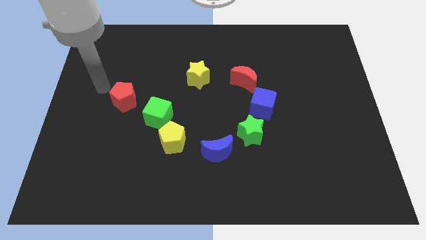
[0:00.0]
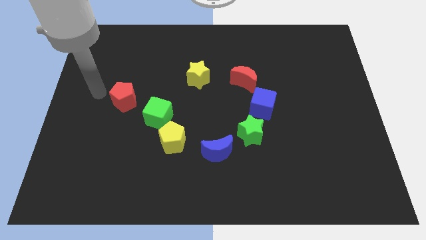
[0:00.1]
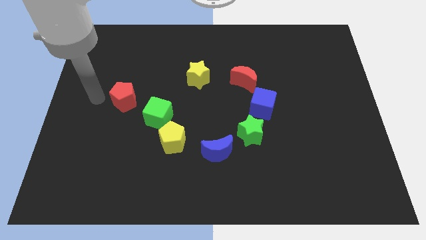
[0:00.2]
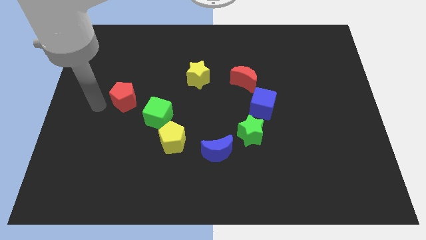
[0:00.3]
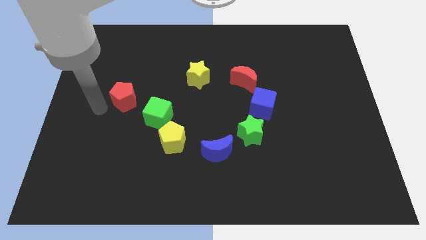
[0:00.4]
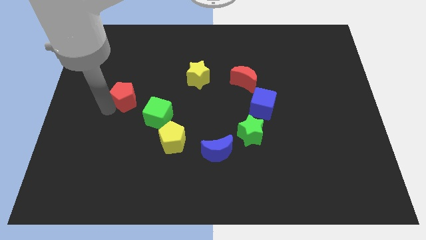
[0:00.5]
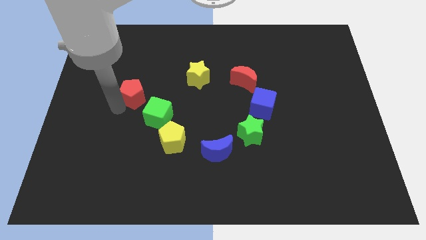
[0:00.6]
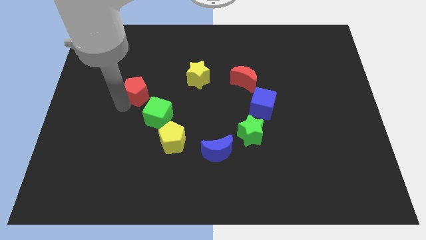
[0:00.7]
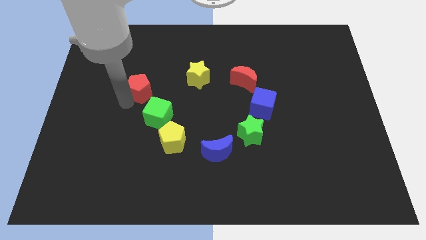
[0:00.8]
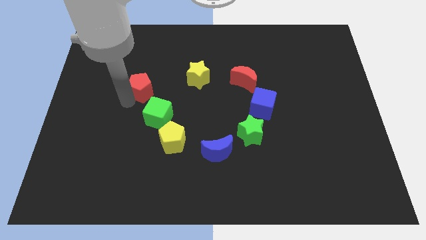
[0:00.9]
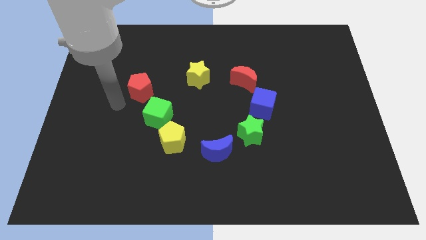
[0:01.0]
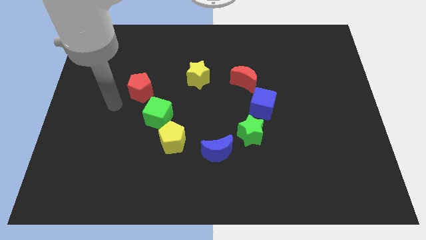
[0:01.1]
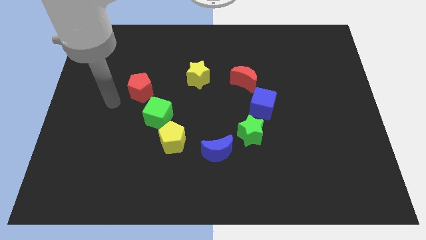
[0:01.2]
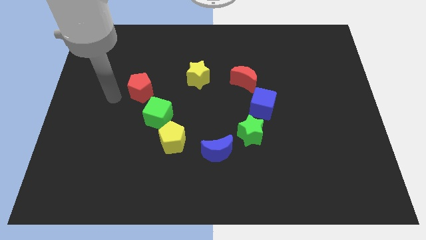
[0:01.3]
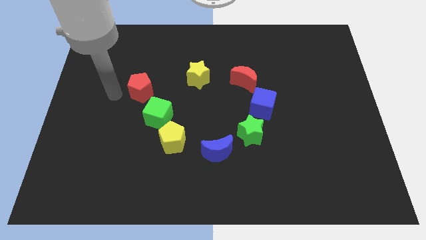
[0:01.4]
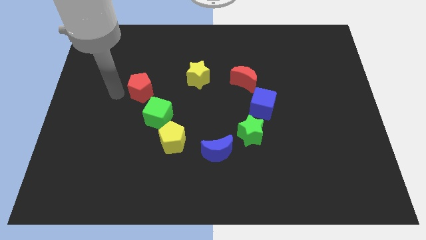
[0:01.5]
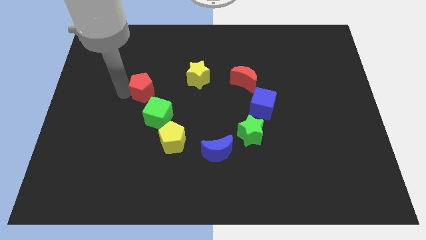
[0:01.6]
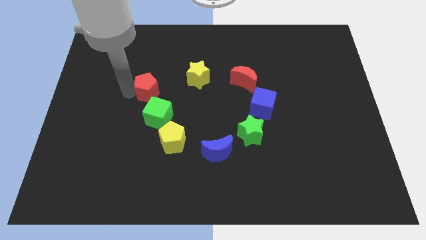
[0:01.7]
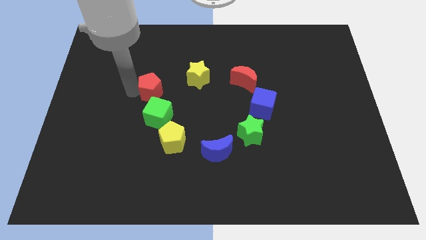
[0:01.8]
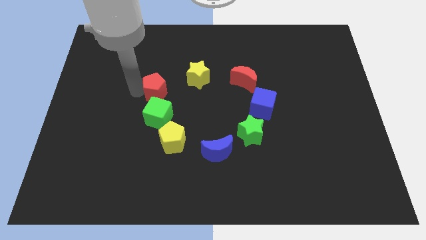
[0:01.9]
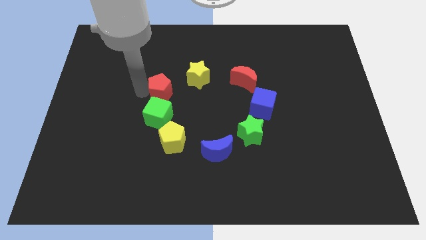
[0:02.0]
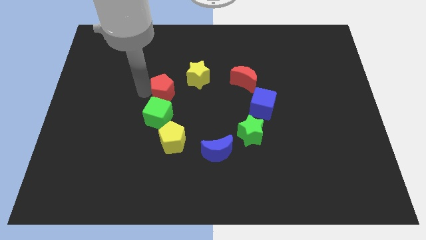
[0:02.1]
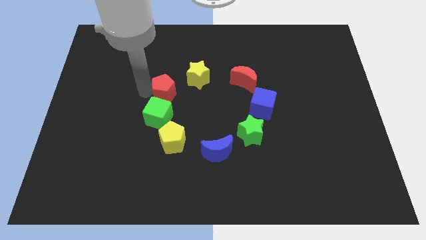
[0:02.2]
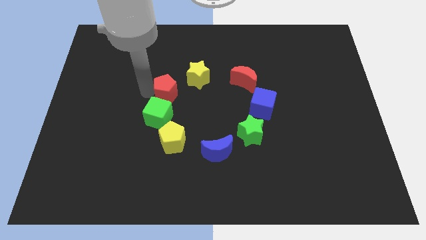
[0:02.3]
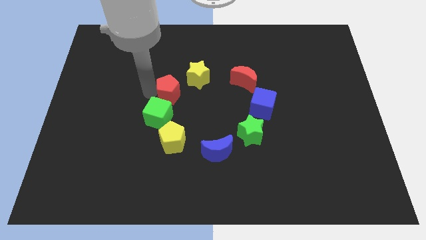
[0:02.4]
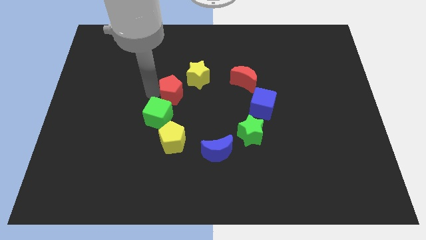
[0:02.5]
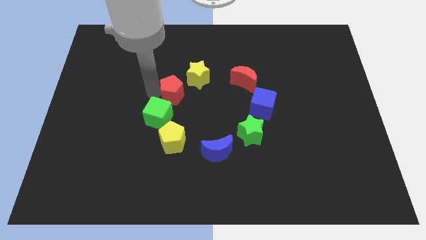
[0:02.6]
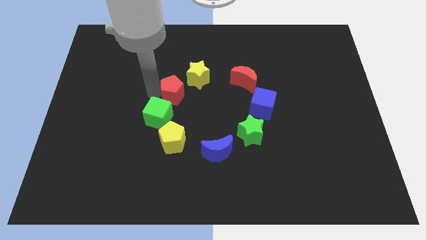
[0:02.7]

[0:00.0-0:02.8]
place the red pentagon vertically on the top of green cube

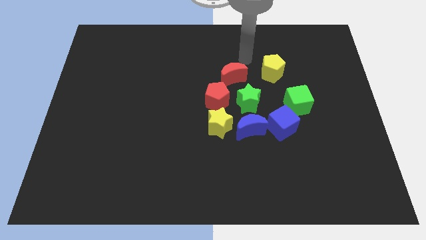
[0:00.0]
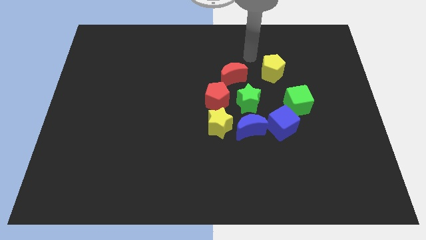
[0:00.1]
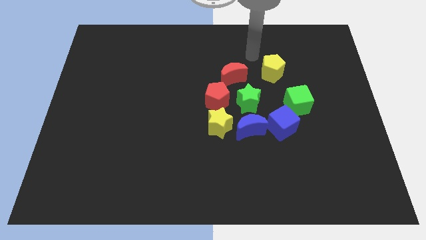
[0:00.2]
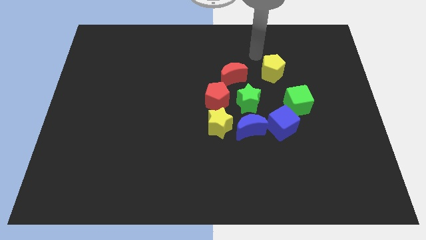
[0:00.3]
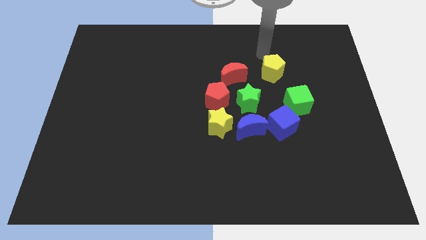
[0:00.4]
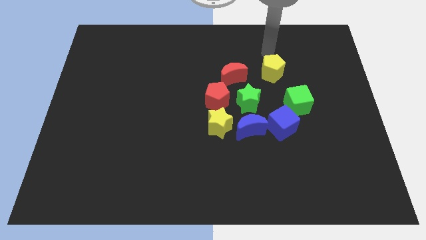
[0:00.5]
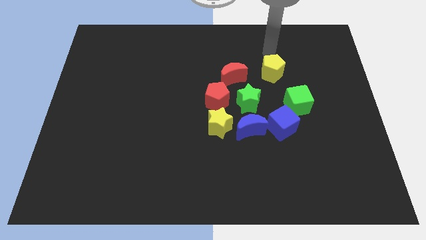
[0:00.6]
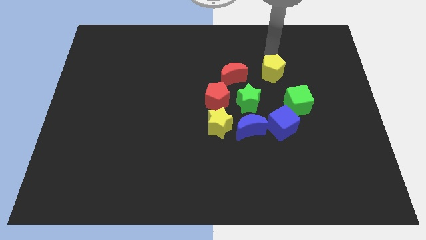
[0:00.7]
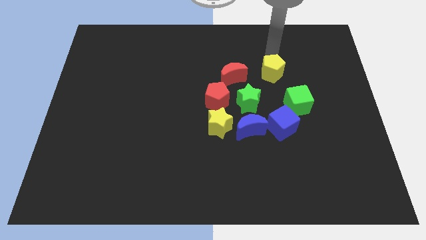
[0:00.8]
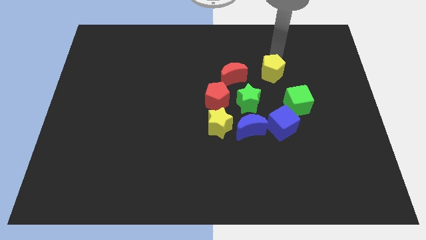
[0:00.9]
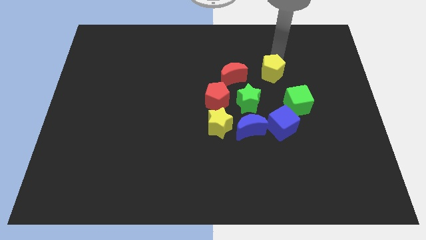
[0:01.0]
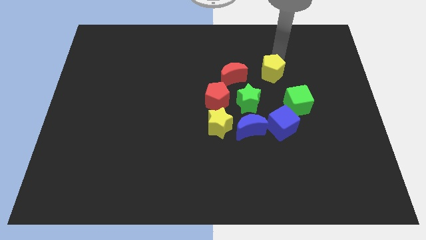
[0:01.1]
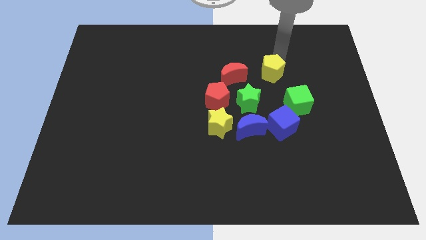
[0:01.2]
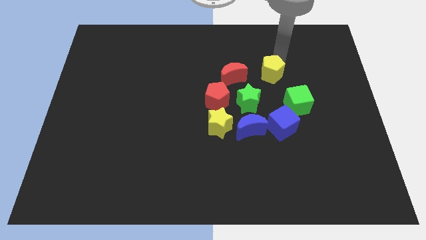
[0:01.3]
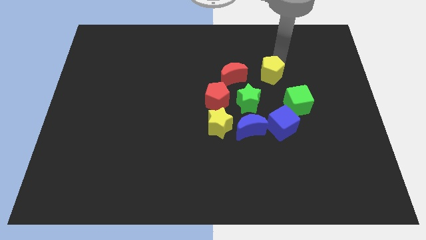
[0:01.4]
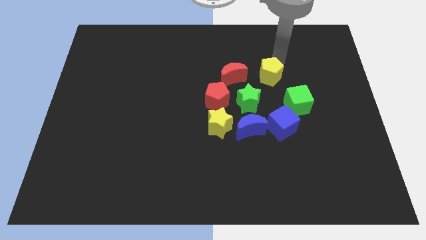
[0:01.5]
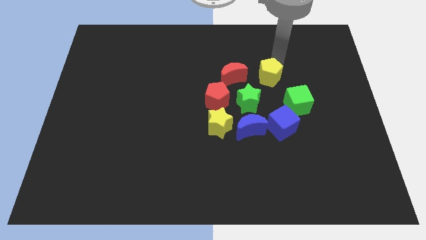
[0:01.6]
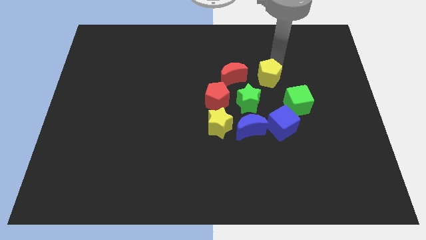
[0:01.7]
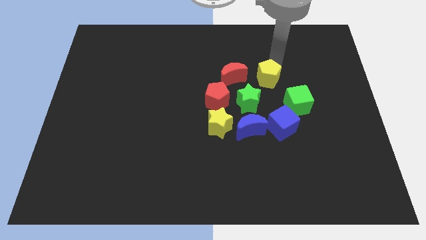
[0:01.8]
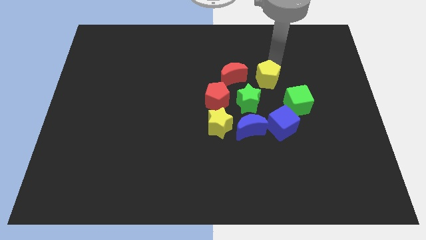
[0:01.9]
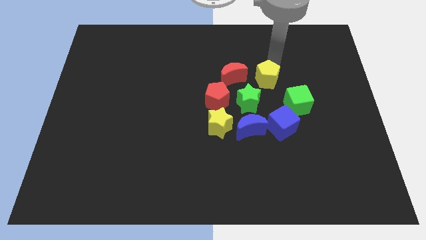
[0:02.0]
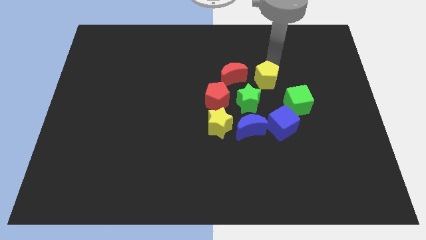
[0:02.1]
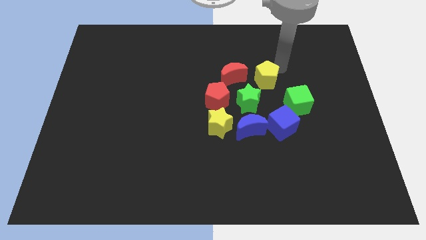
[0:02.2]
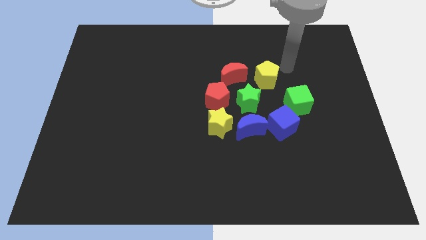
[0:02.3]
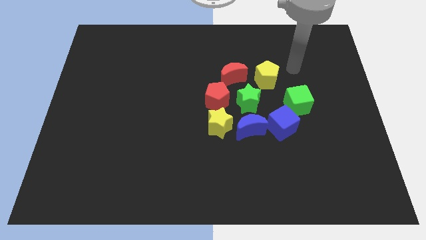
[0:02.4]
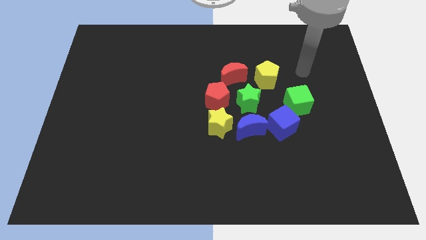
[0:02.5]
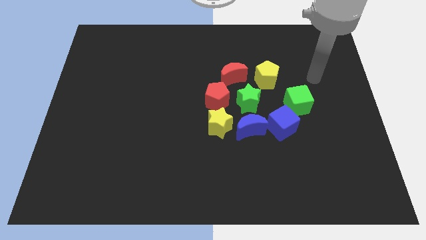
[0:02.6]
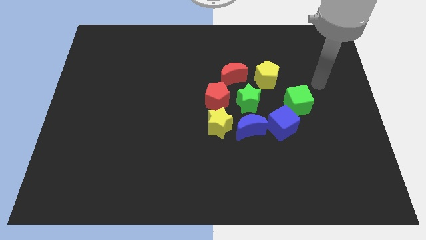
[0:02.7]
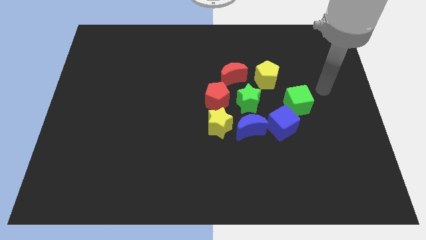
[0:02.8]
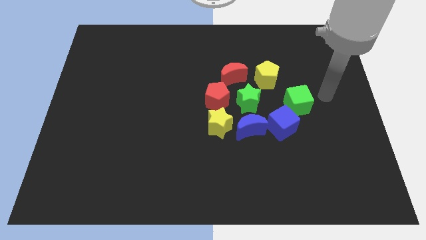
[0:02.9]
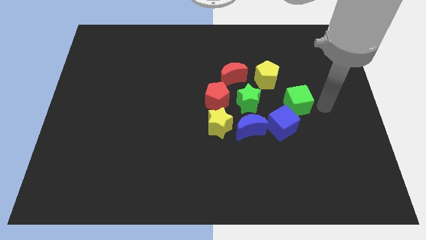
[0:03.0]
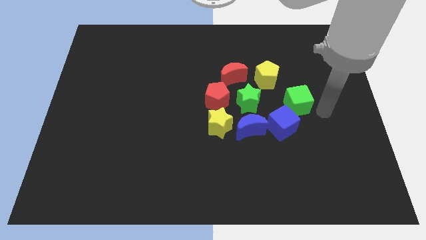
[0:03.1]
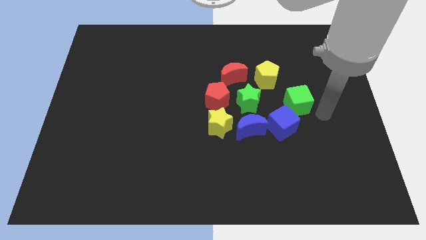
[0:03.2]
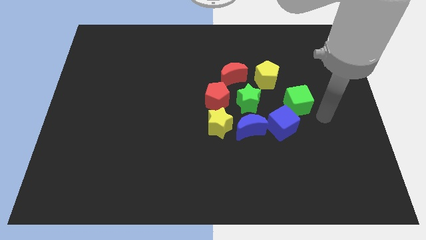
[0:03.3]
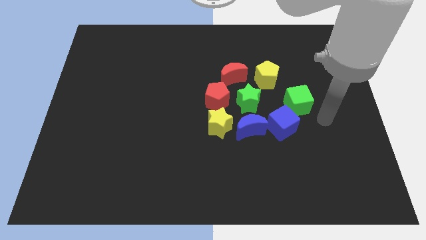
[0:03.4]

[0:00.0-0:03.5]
move the yellow pentagon slightly to the bottom of the board

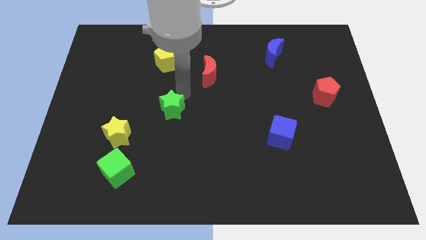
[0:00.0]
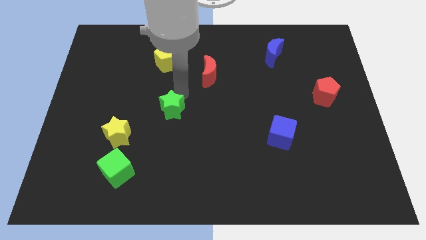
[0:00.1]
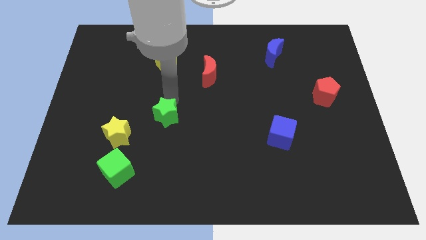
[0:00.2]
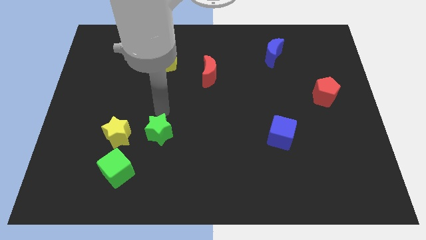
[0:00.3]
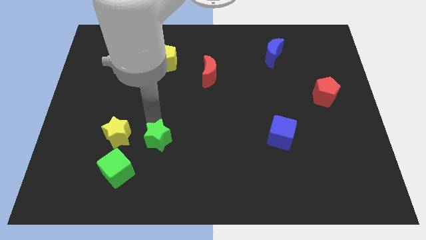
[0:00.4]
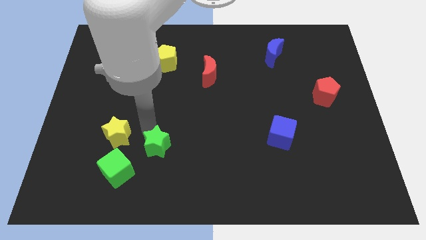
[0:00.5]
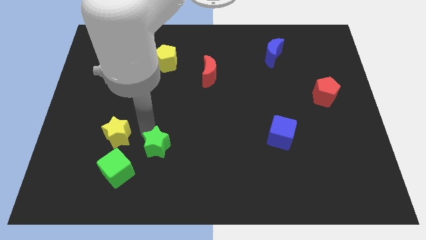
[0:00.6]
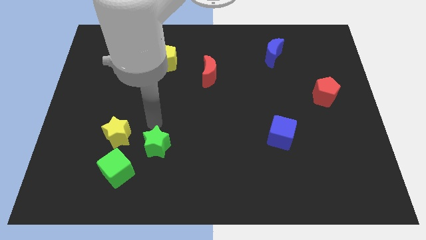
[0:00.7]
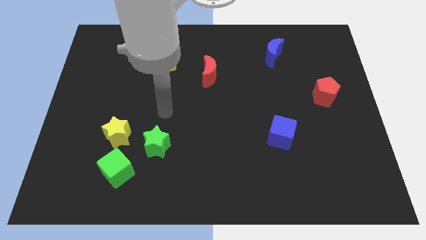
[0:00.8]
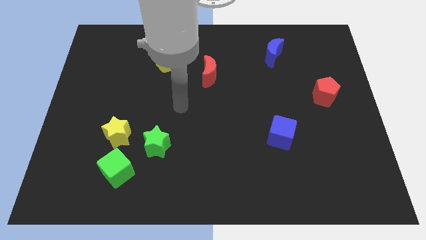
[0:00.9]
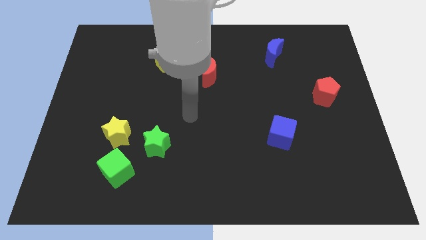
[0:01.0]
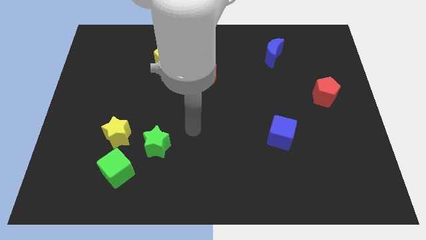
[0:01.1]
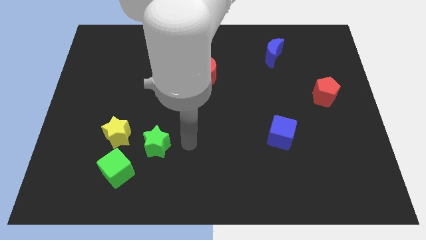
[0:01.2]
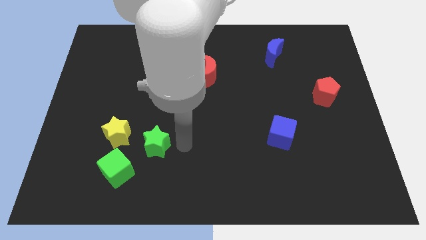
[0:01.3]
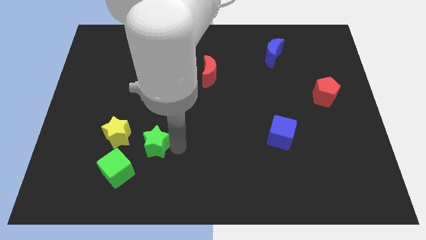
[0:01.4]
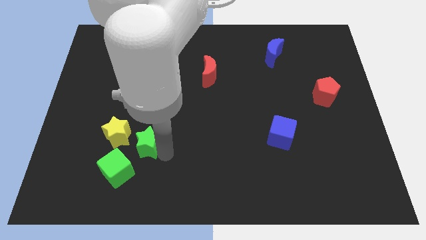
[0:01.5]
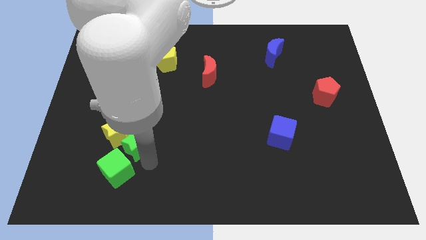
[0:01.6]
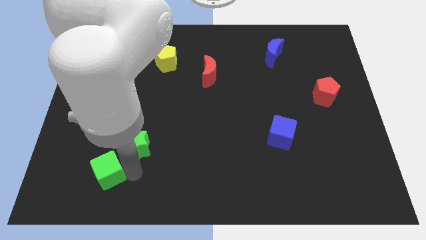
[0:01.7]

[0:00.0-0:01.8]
push the green star to the bottom right of yellow star

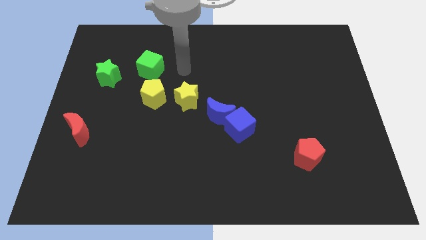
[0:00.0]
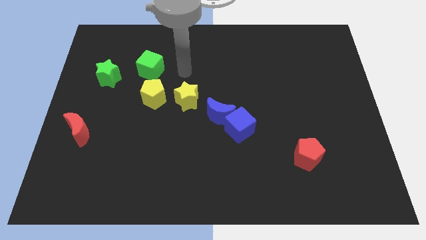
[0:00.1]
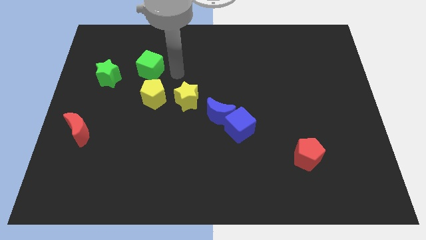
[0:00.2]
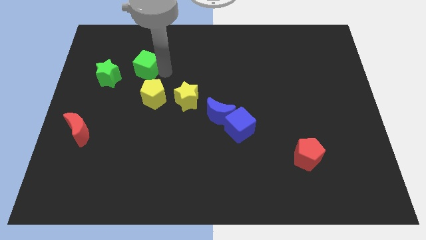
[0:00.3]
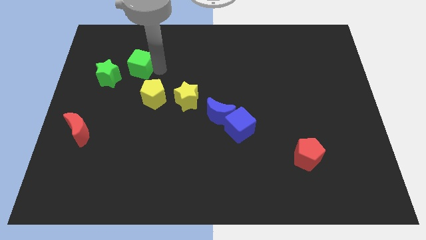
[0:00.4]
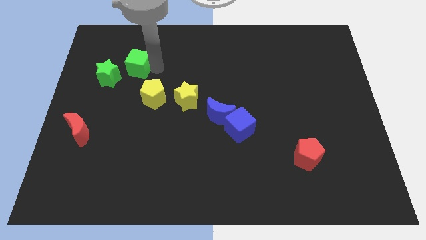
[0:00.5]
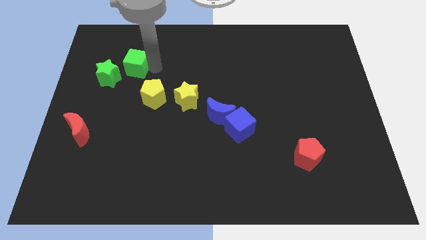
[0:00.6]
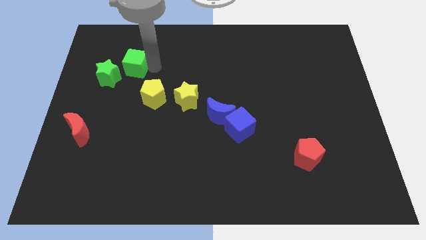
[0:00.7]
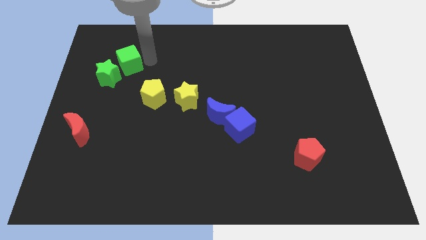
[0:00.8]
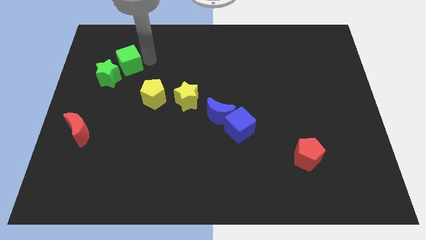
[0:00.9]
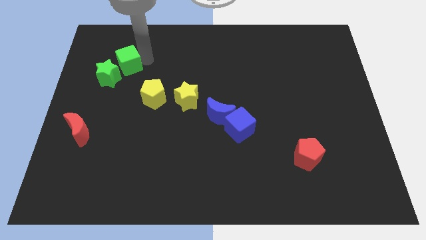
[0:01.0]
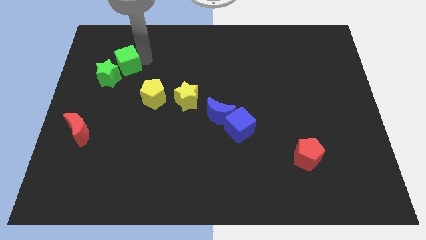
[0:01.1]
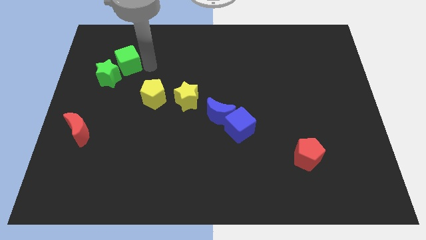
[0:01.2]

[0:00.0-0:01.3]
push the green cube towards the green star
